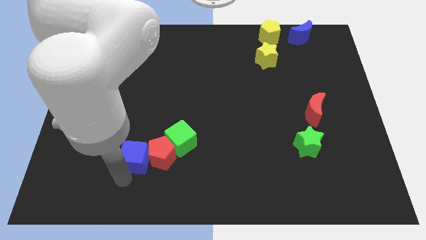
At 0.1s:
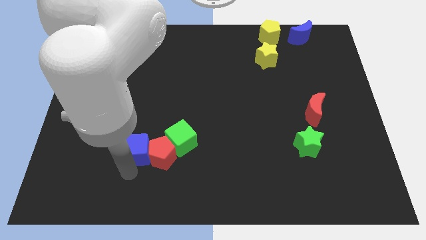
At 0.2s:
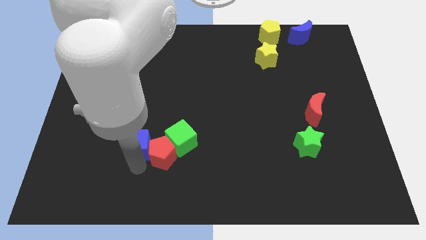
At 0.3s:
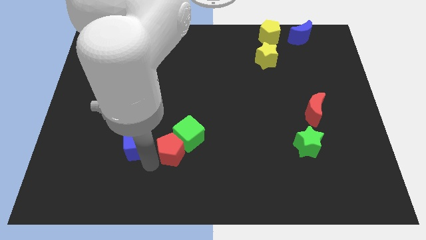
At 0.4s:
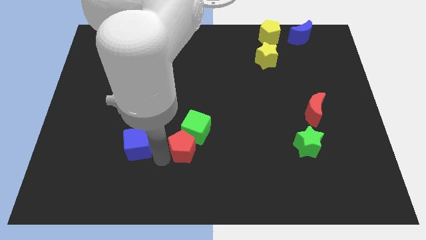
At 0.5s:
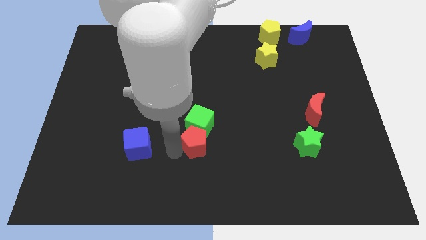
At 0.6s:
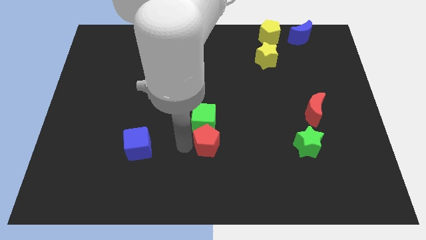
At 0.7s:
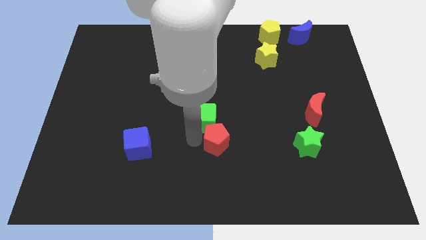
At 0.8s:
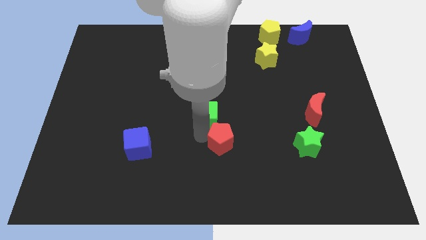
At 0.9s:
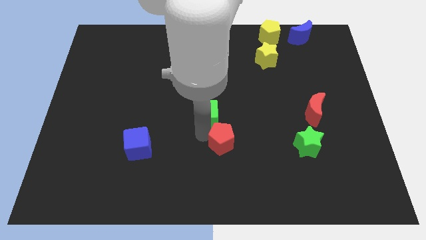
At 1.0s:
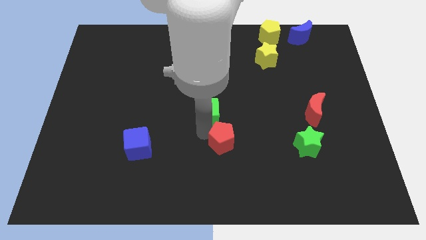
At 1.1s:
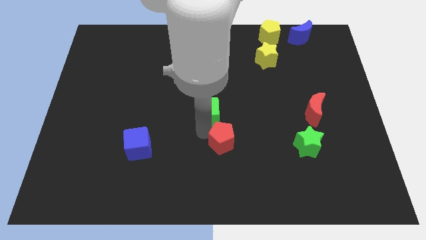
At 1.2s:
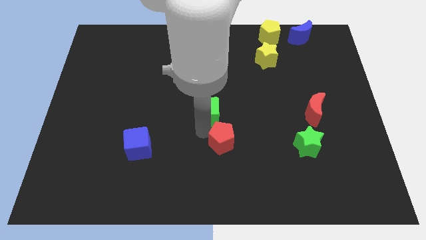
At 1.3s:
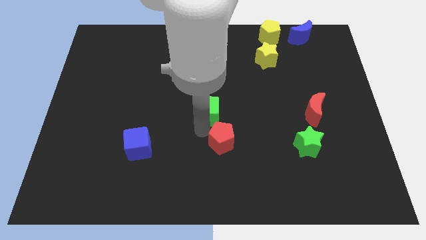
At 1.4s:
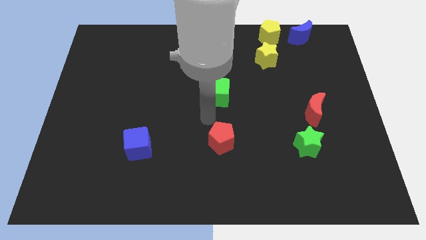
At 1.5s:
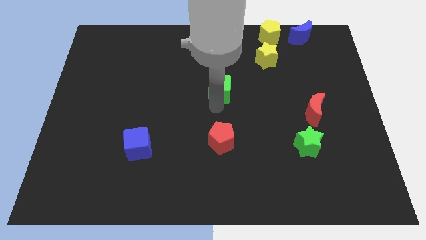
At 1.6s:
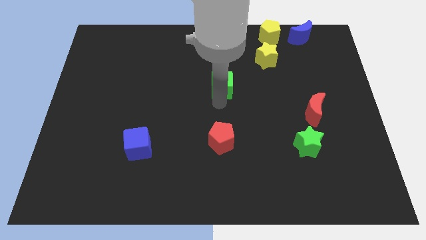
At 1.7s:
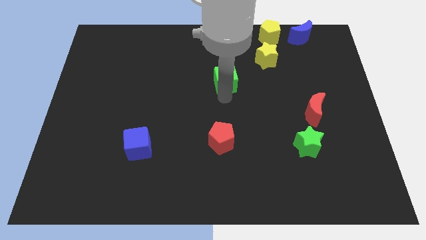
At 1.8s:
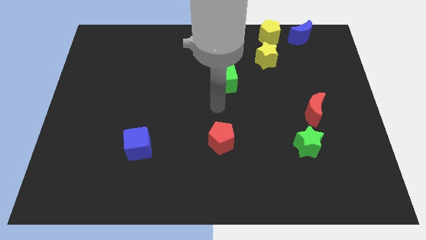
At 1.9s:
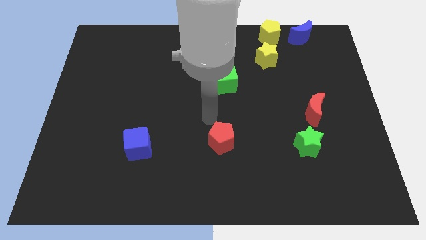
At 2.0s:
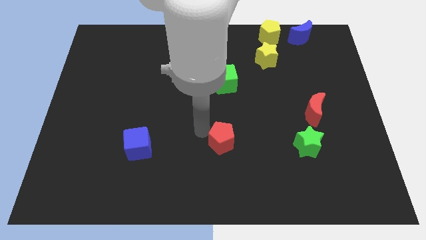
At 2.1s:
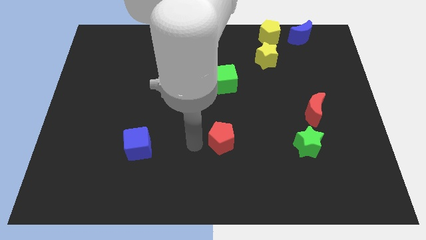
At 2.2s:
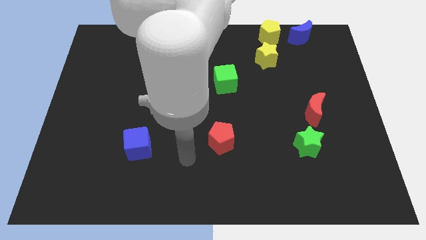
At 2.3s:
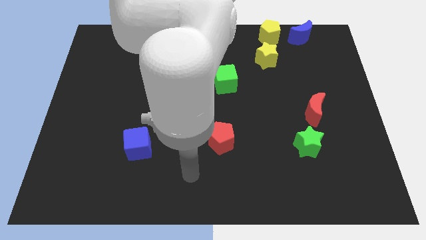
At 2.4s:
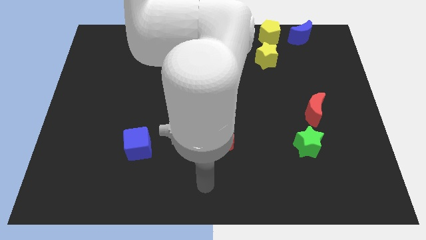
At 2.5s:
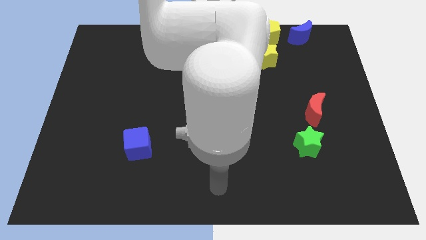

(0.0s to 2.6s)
move the green cube to the center

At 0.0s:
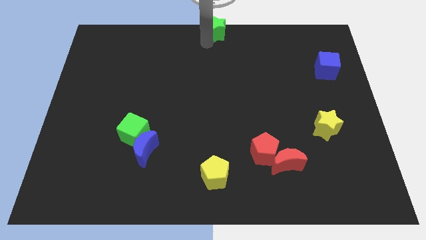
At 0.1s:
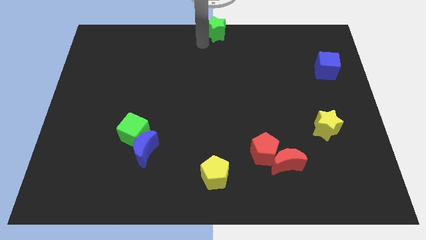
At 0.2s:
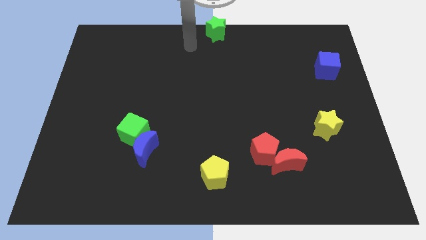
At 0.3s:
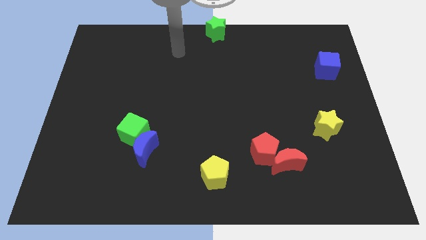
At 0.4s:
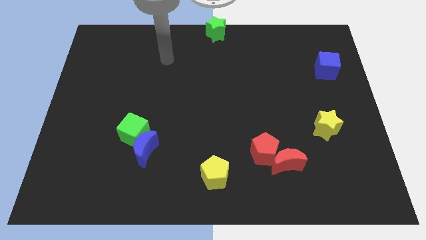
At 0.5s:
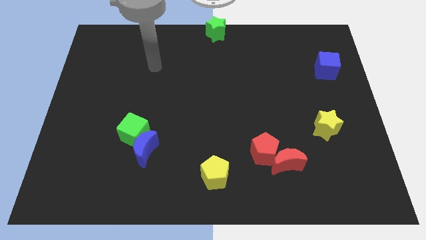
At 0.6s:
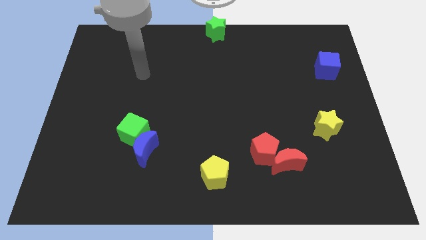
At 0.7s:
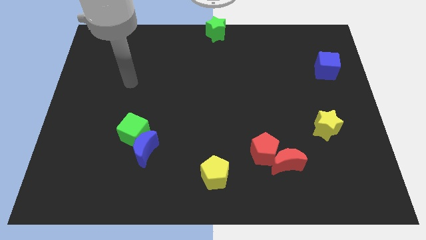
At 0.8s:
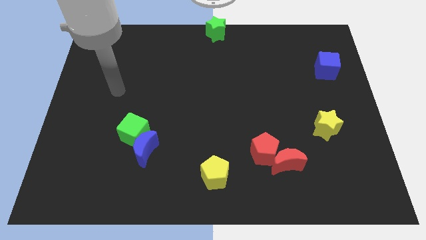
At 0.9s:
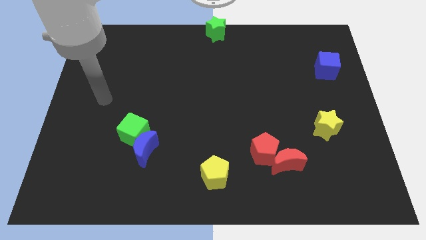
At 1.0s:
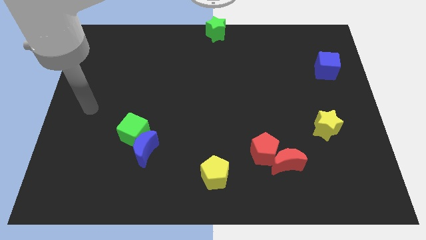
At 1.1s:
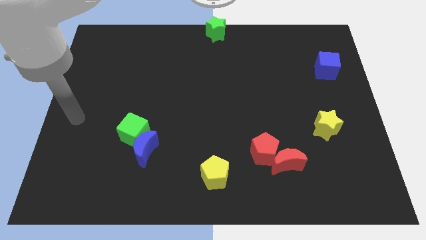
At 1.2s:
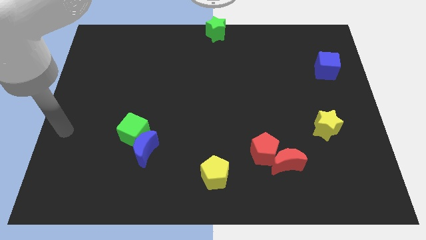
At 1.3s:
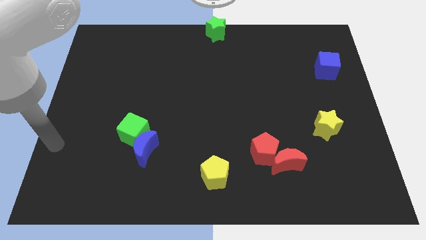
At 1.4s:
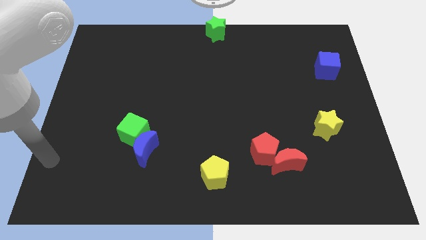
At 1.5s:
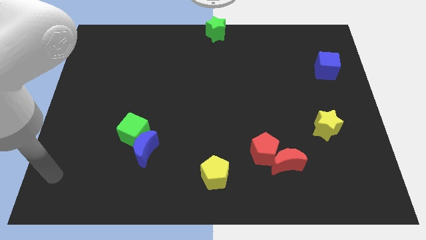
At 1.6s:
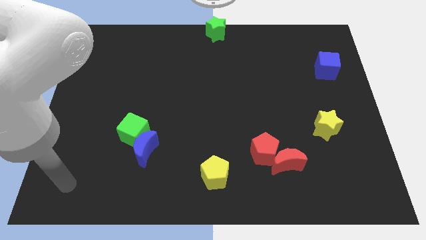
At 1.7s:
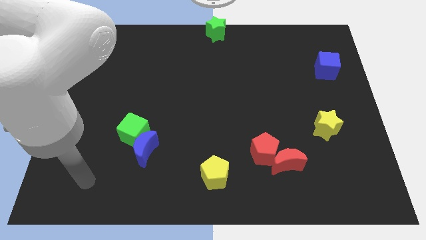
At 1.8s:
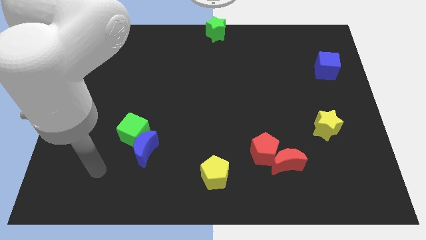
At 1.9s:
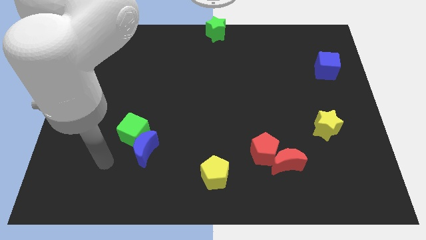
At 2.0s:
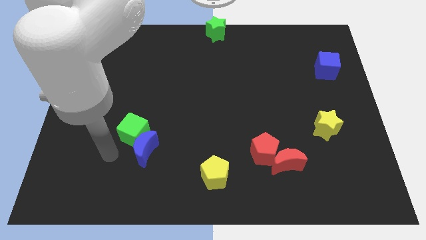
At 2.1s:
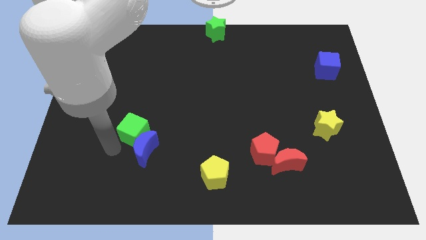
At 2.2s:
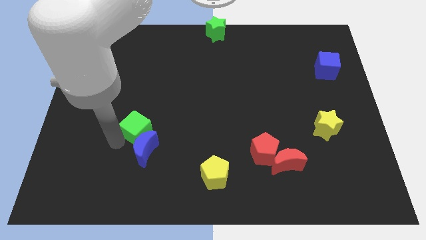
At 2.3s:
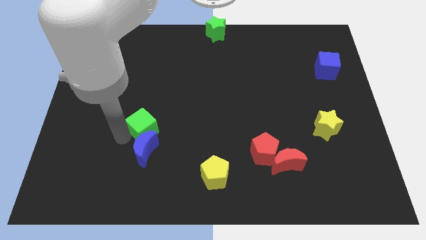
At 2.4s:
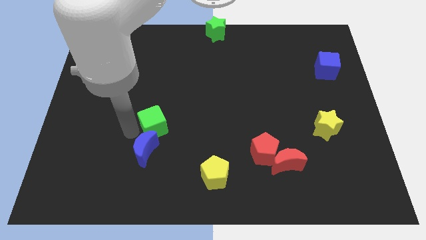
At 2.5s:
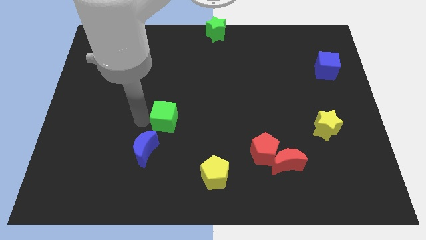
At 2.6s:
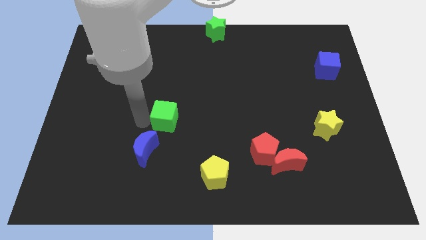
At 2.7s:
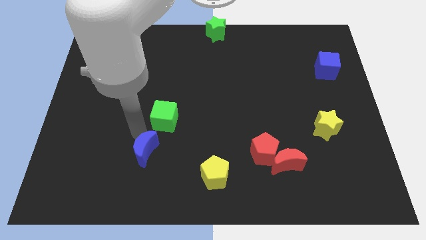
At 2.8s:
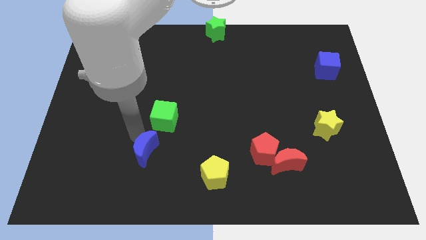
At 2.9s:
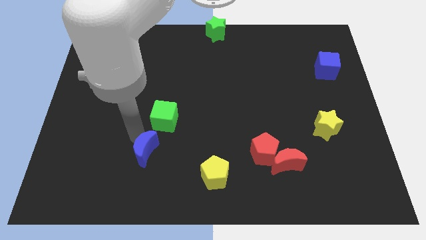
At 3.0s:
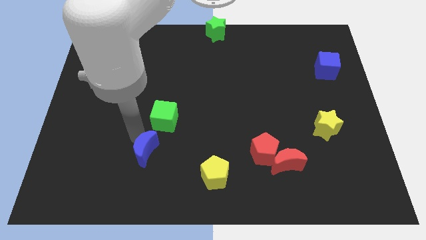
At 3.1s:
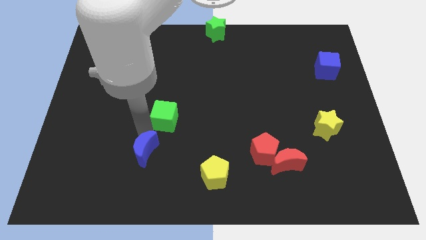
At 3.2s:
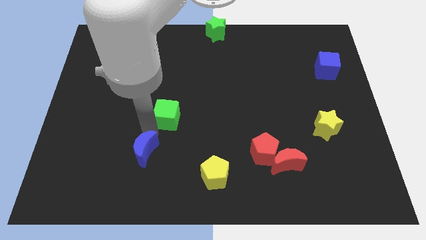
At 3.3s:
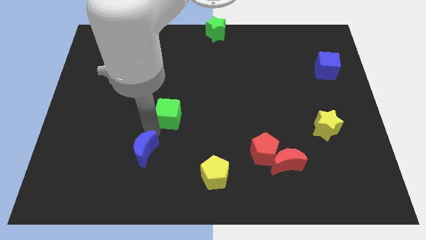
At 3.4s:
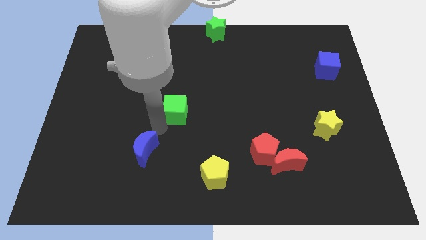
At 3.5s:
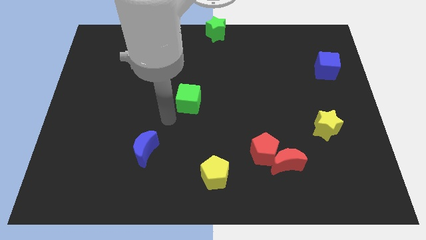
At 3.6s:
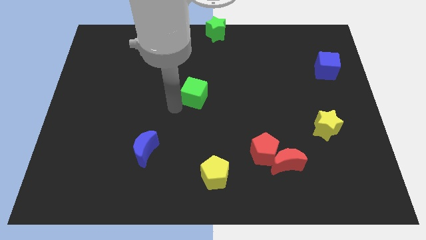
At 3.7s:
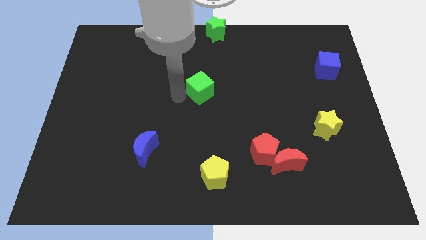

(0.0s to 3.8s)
move the green cube to the top of the yellow pentagon

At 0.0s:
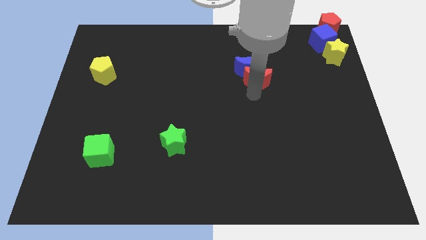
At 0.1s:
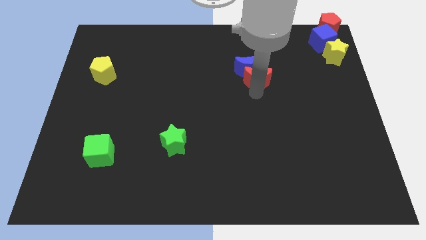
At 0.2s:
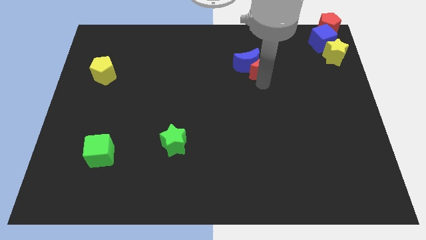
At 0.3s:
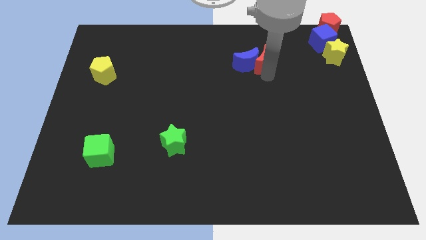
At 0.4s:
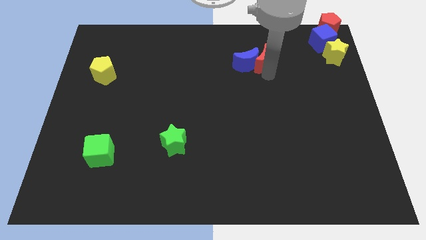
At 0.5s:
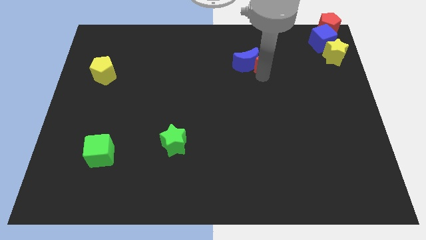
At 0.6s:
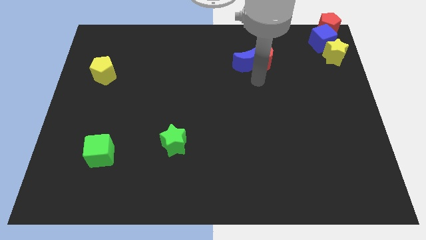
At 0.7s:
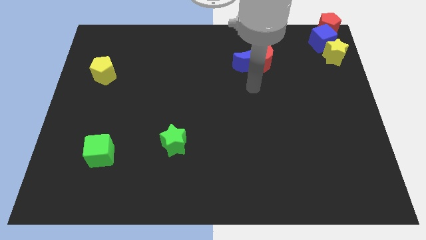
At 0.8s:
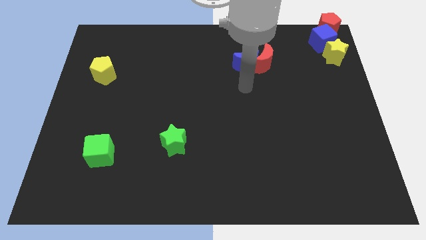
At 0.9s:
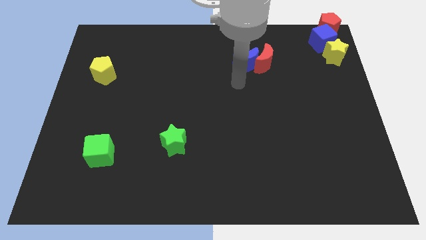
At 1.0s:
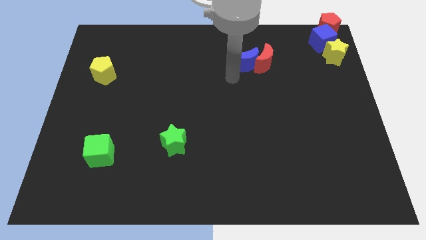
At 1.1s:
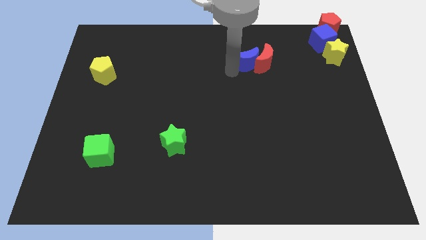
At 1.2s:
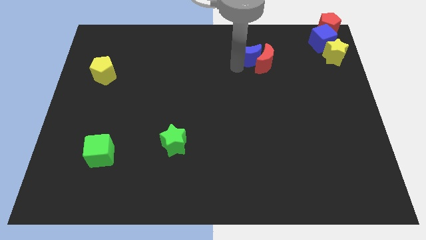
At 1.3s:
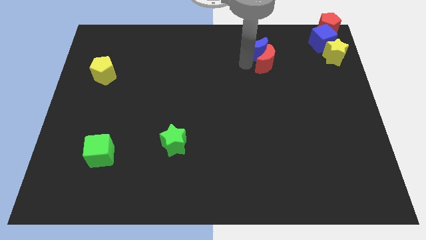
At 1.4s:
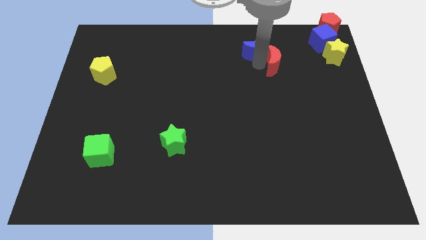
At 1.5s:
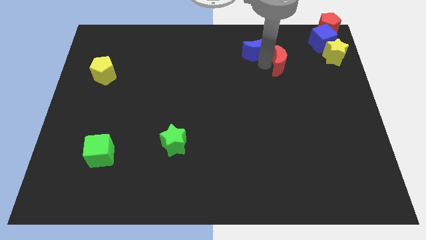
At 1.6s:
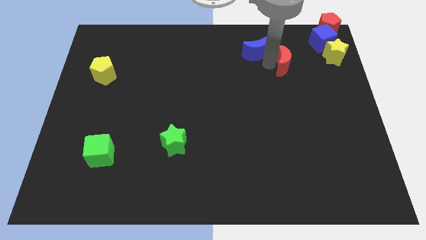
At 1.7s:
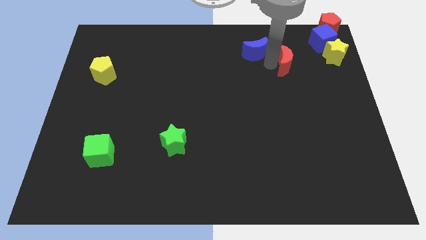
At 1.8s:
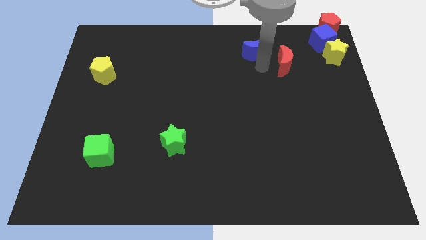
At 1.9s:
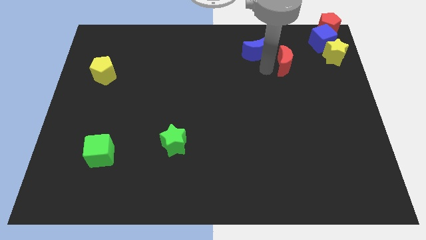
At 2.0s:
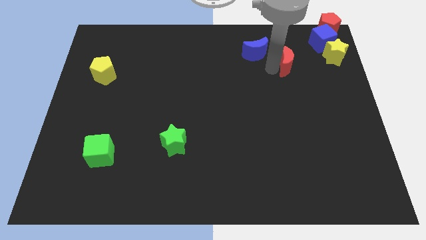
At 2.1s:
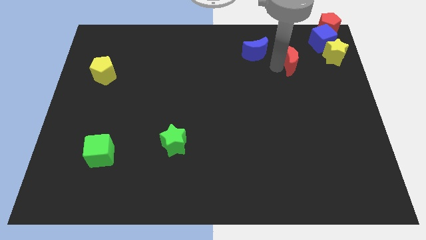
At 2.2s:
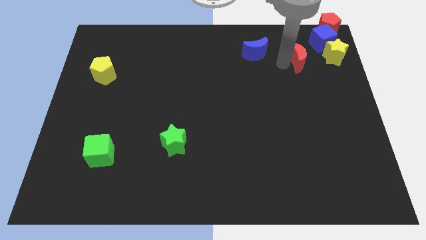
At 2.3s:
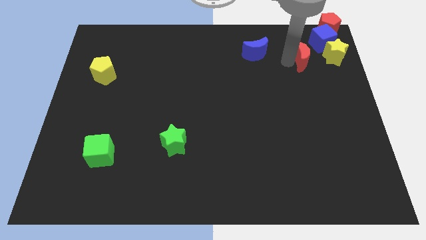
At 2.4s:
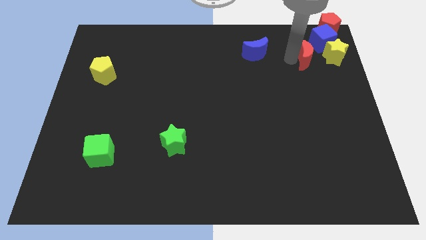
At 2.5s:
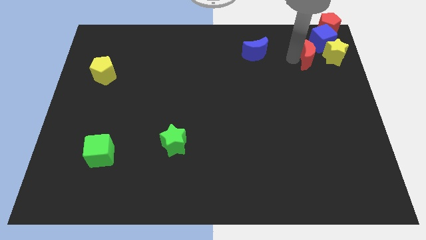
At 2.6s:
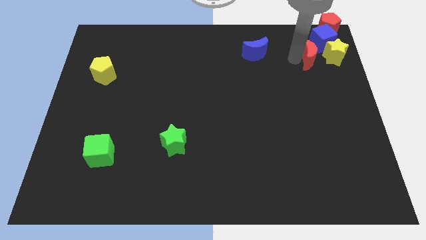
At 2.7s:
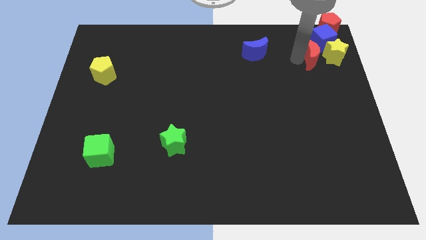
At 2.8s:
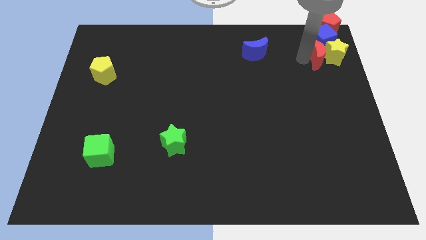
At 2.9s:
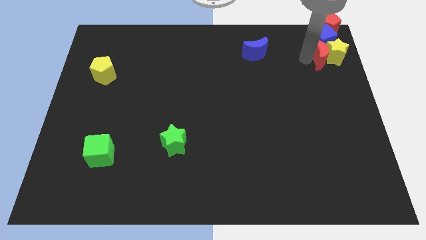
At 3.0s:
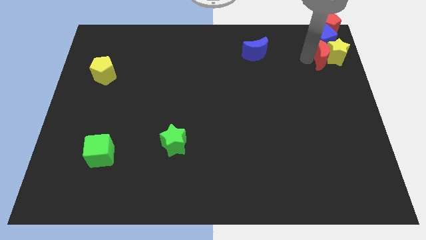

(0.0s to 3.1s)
separate red moon and the blue moon
